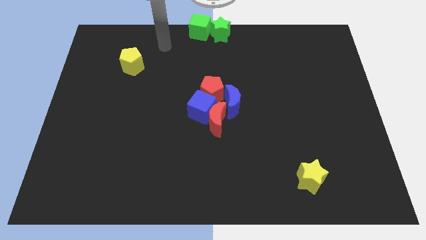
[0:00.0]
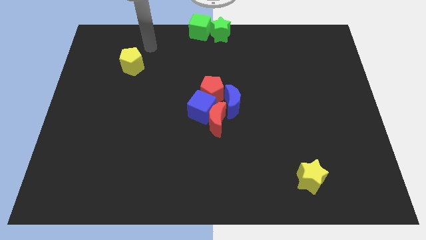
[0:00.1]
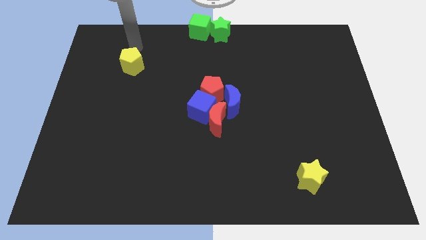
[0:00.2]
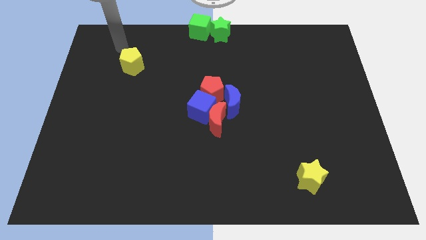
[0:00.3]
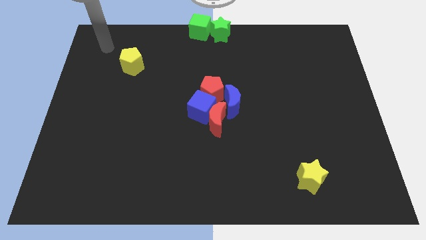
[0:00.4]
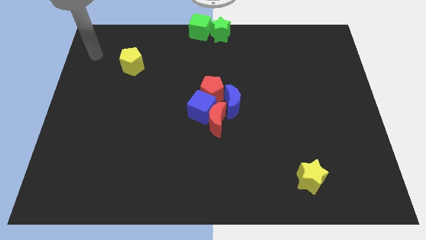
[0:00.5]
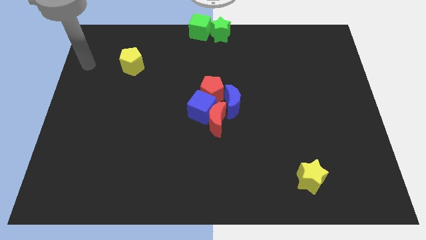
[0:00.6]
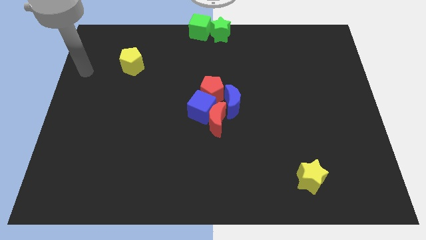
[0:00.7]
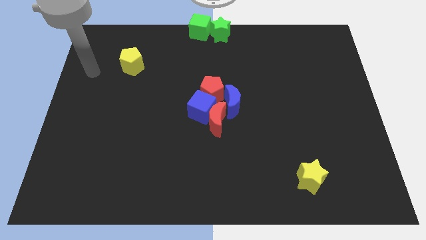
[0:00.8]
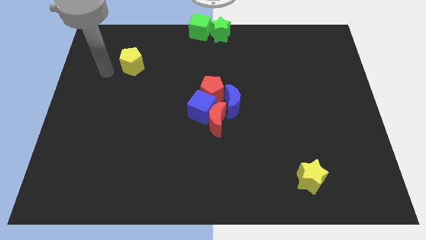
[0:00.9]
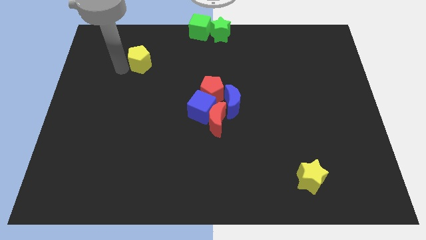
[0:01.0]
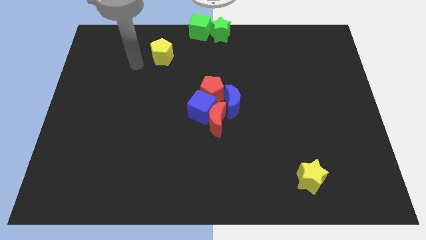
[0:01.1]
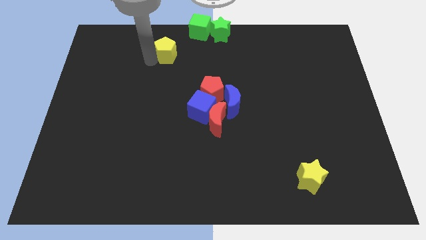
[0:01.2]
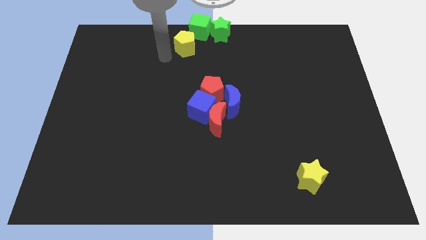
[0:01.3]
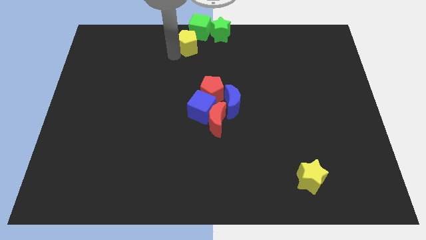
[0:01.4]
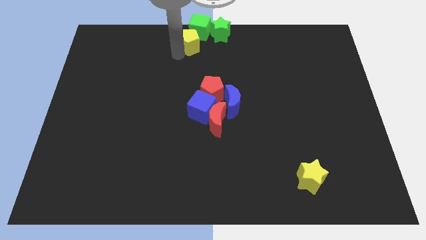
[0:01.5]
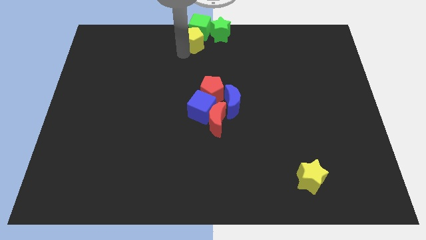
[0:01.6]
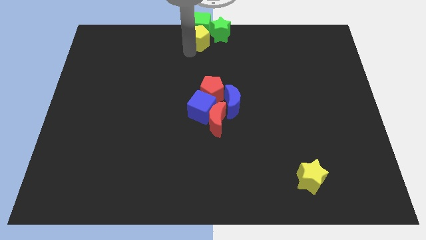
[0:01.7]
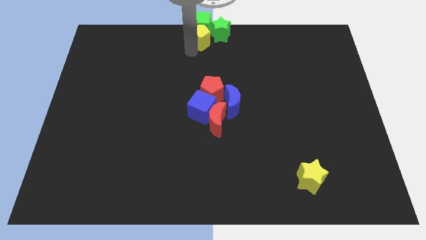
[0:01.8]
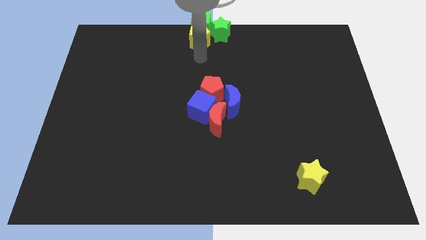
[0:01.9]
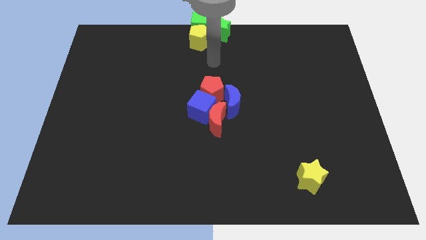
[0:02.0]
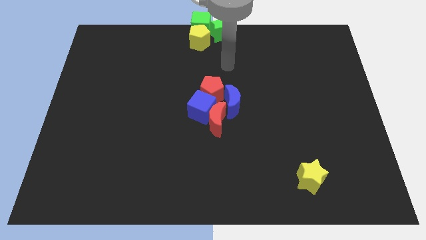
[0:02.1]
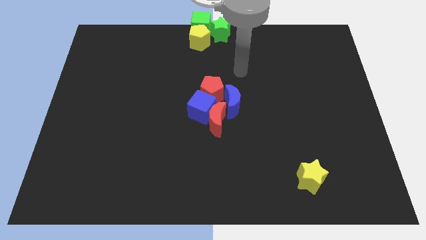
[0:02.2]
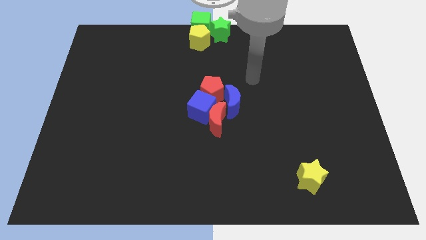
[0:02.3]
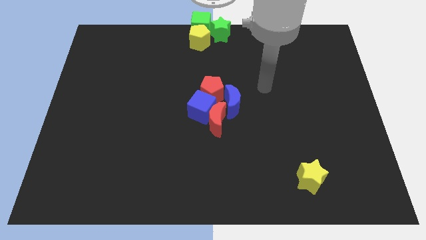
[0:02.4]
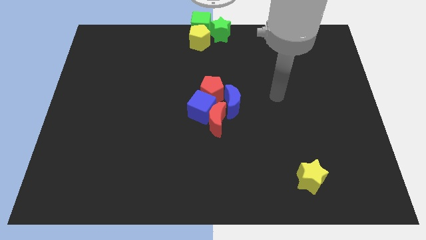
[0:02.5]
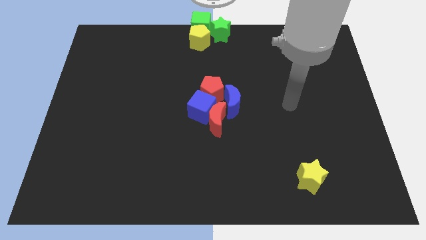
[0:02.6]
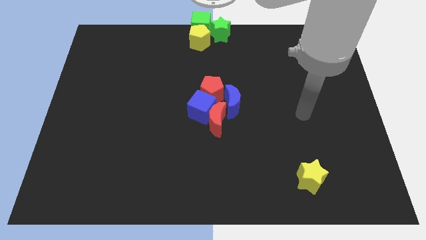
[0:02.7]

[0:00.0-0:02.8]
push the yellow pentagon down to the green cube

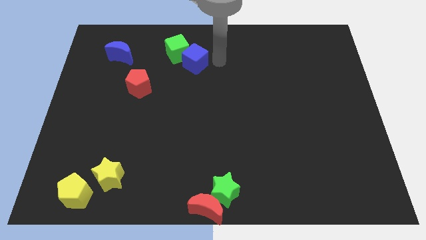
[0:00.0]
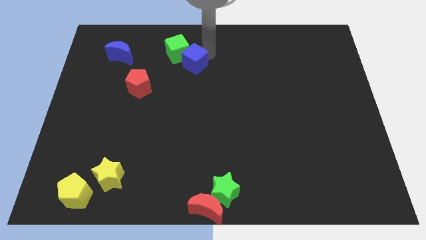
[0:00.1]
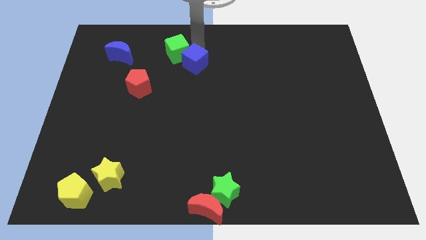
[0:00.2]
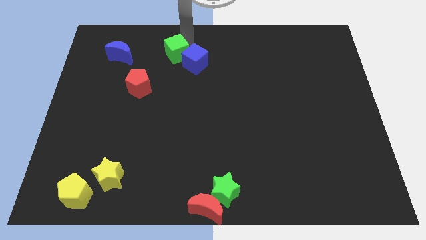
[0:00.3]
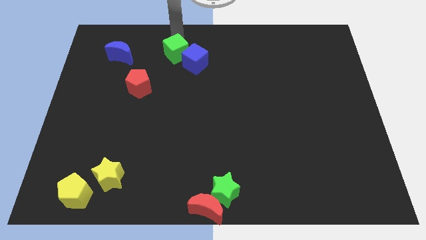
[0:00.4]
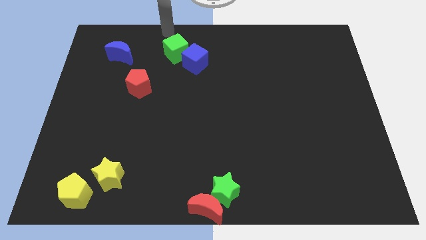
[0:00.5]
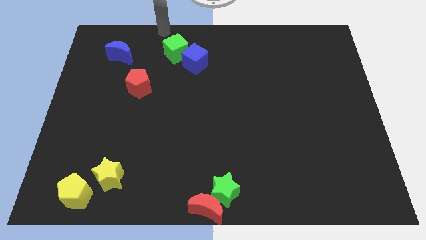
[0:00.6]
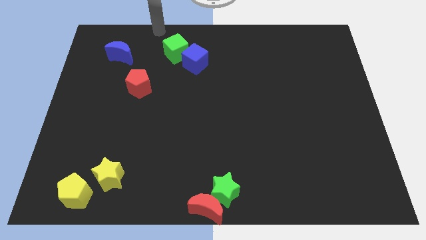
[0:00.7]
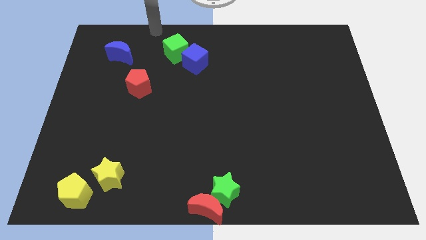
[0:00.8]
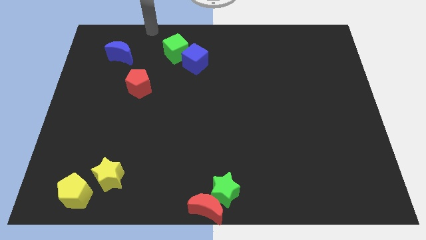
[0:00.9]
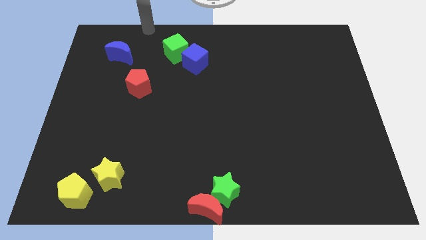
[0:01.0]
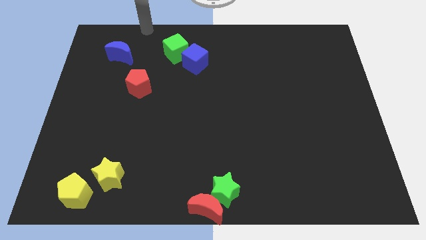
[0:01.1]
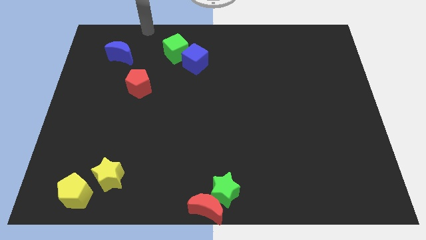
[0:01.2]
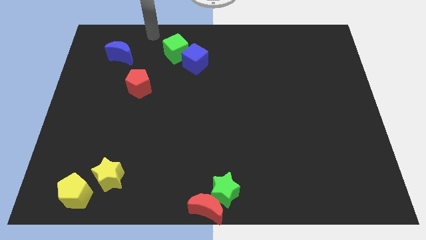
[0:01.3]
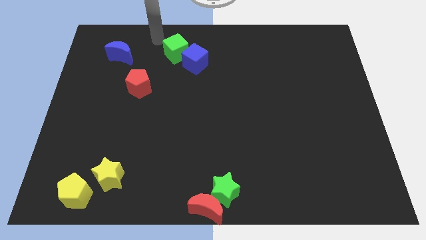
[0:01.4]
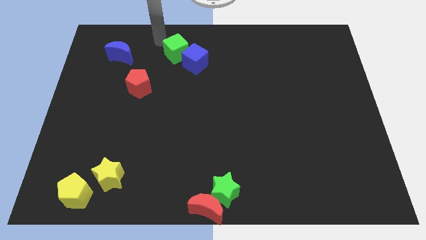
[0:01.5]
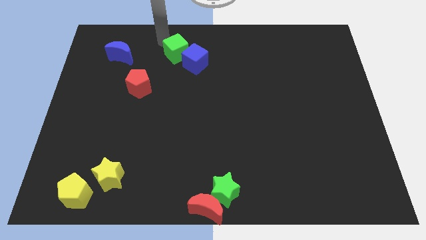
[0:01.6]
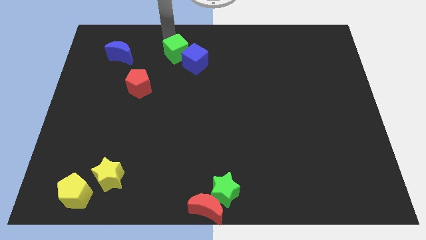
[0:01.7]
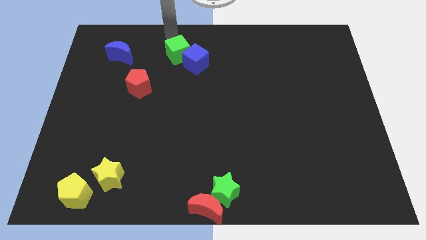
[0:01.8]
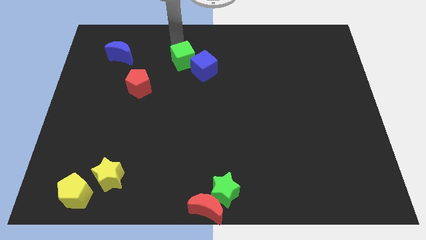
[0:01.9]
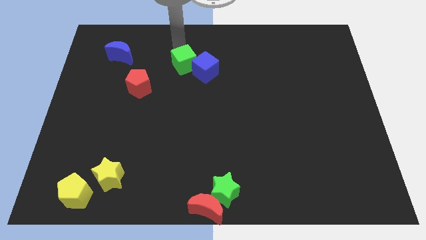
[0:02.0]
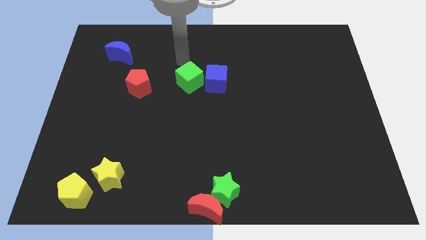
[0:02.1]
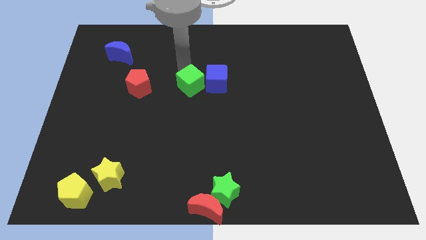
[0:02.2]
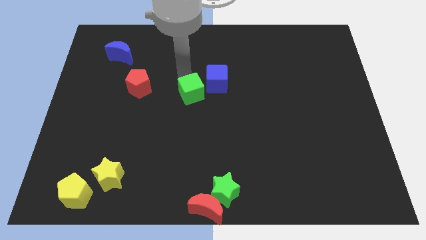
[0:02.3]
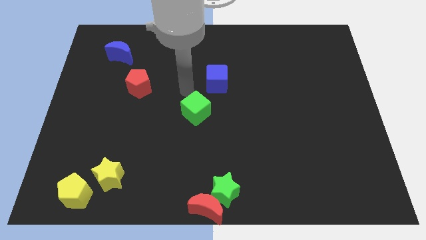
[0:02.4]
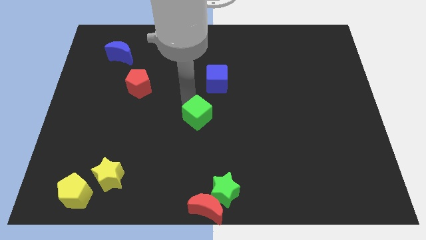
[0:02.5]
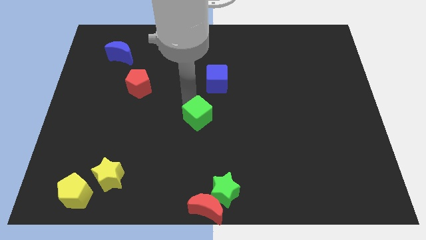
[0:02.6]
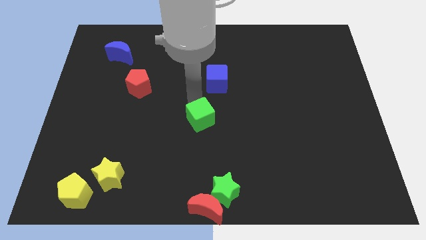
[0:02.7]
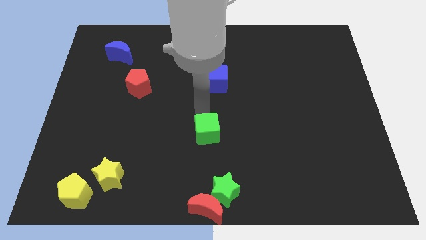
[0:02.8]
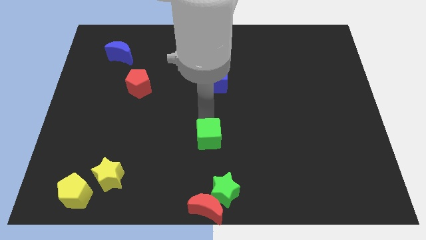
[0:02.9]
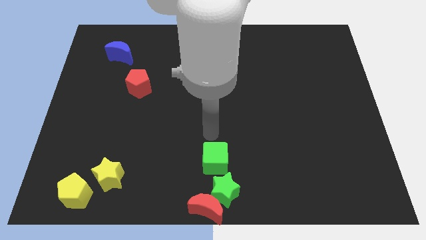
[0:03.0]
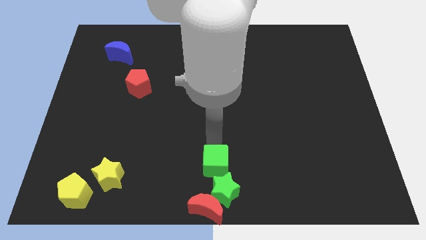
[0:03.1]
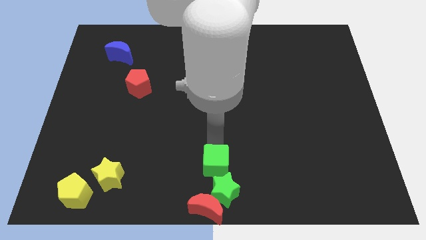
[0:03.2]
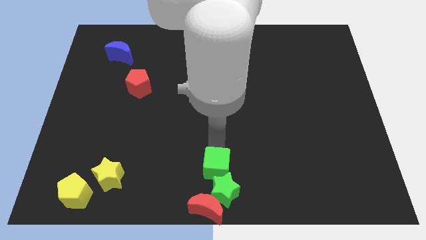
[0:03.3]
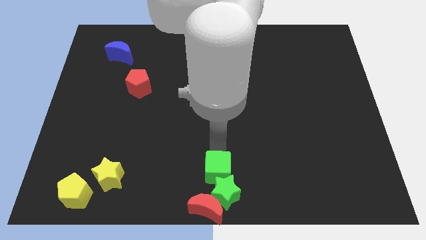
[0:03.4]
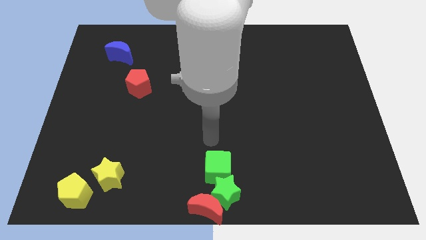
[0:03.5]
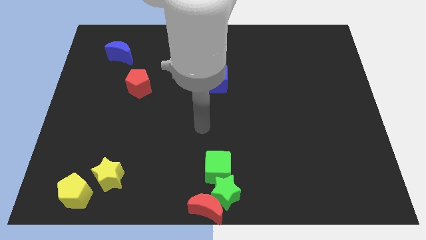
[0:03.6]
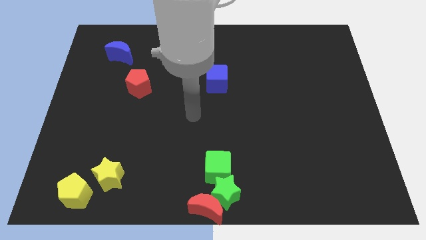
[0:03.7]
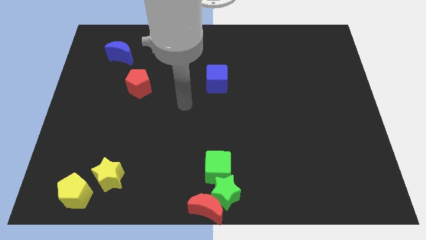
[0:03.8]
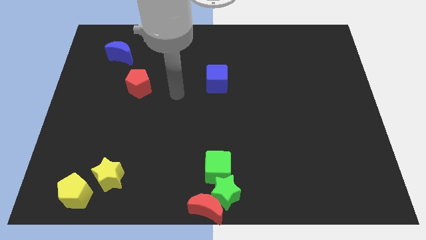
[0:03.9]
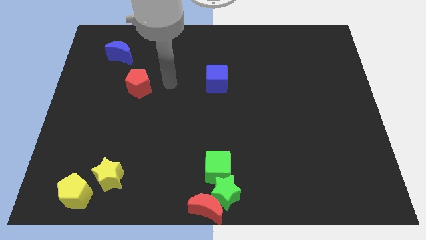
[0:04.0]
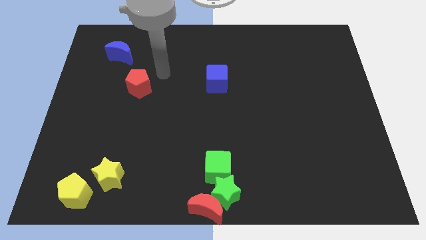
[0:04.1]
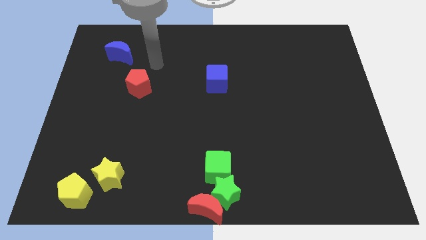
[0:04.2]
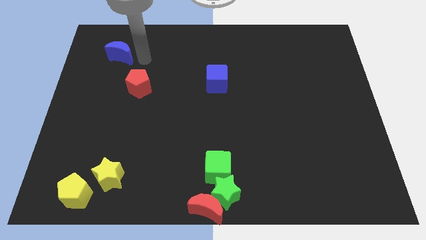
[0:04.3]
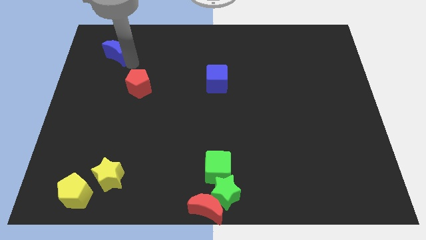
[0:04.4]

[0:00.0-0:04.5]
separate green cube from blue cube

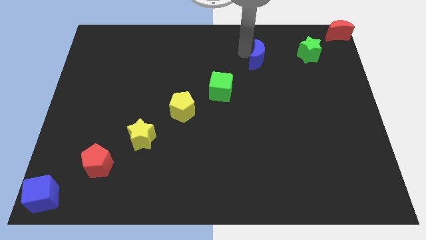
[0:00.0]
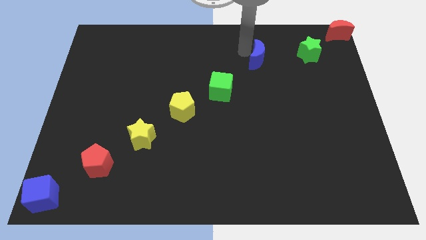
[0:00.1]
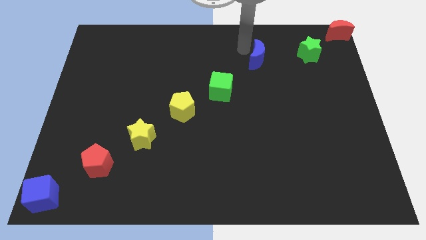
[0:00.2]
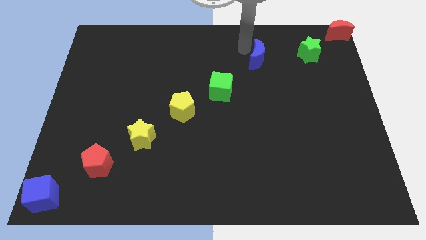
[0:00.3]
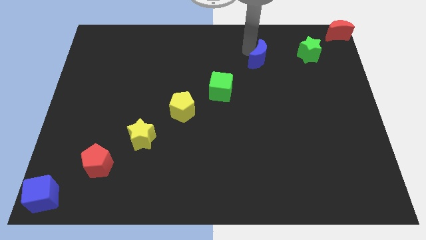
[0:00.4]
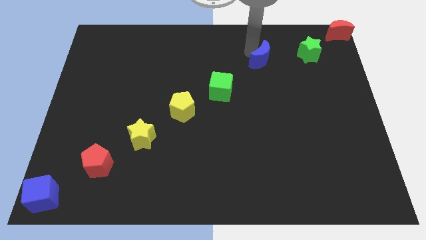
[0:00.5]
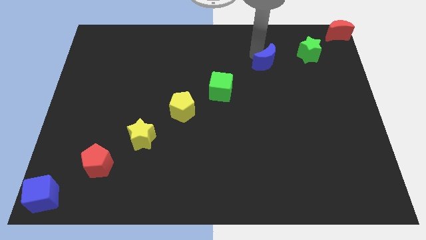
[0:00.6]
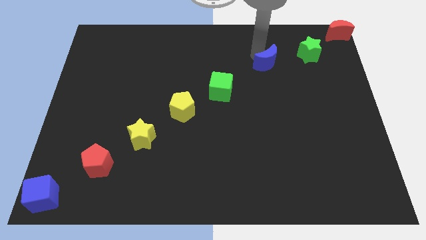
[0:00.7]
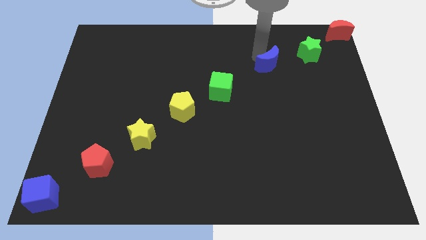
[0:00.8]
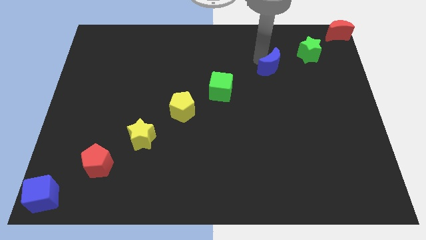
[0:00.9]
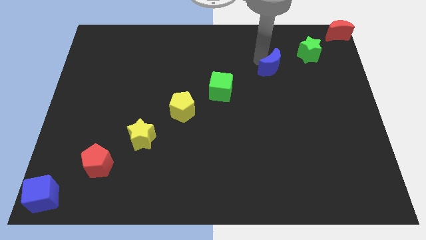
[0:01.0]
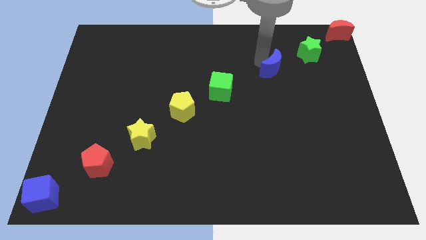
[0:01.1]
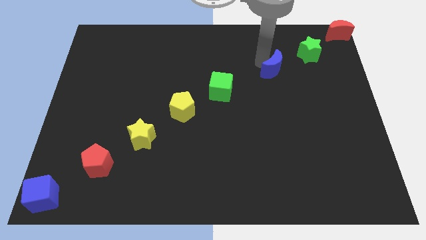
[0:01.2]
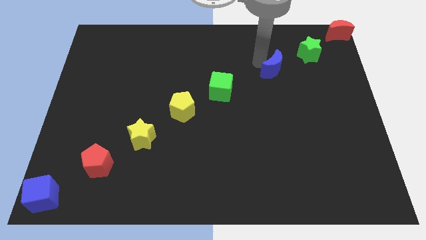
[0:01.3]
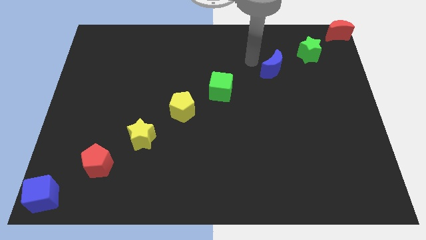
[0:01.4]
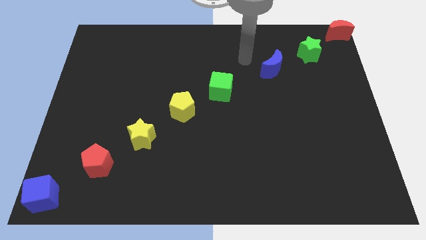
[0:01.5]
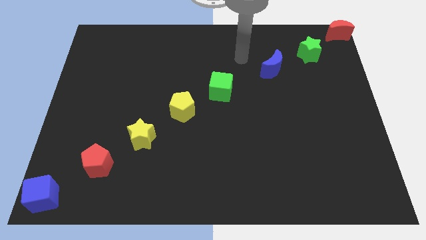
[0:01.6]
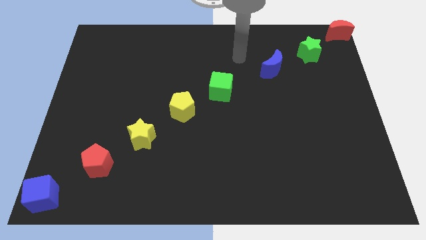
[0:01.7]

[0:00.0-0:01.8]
place the blue crescent in between the green cube and green star
